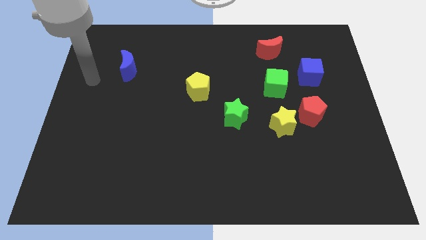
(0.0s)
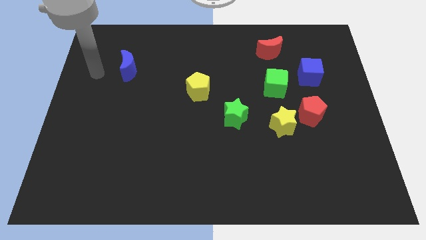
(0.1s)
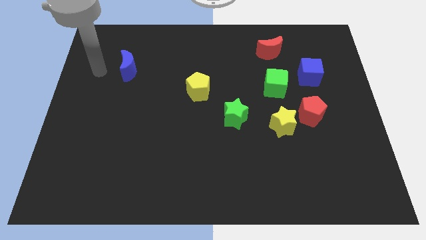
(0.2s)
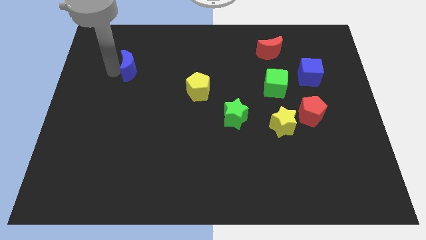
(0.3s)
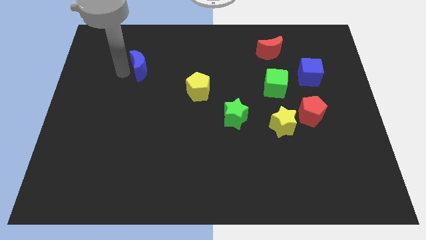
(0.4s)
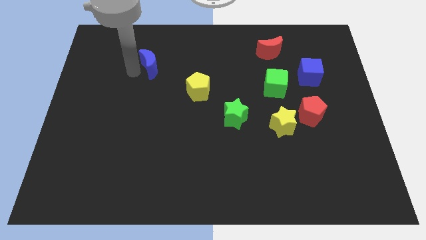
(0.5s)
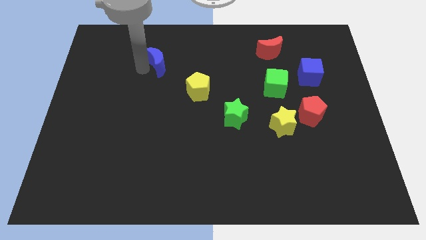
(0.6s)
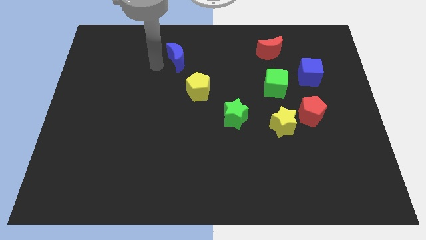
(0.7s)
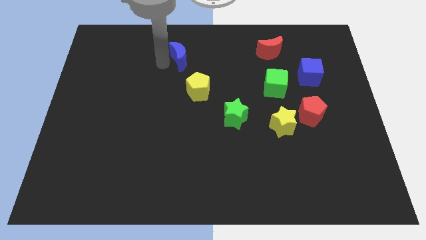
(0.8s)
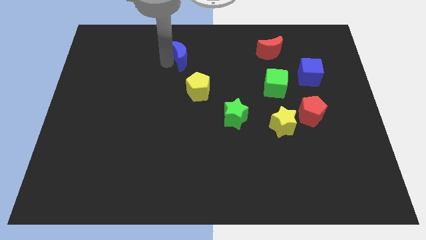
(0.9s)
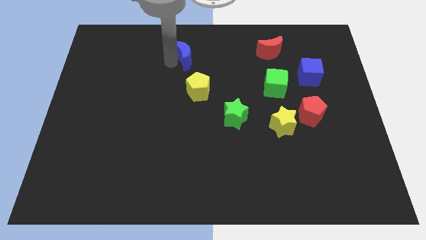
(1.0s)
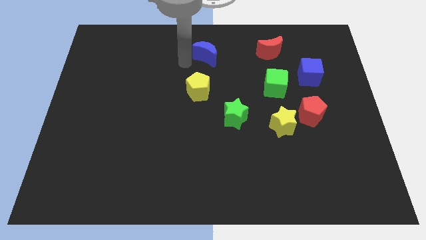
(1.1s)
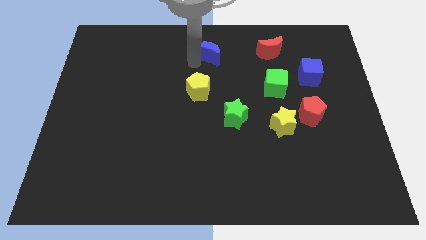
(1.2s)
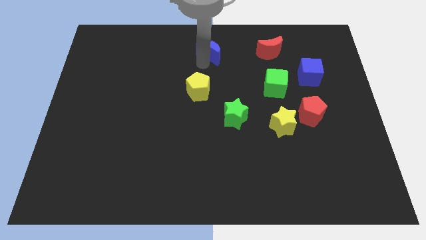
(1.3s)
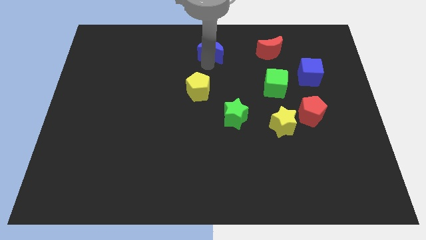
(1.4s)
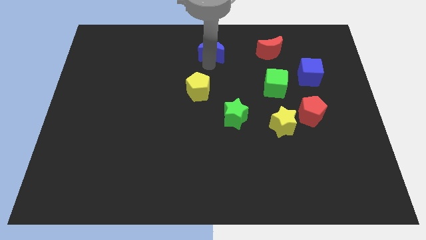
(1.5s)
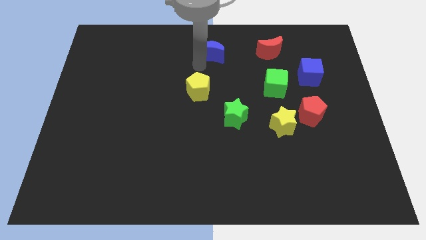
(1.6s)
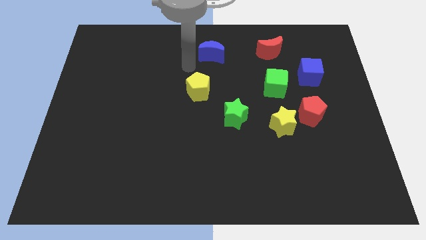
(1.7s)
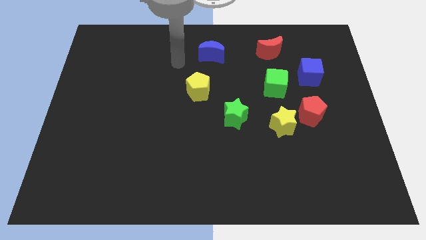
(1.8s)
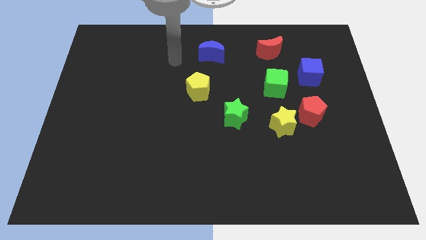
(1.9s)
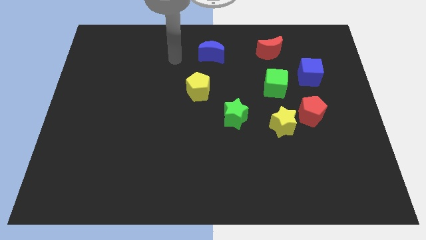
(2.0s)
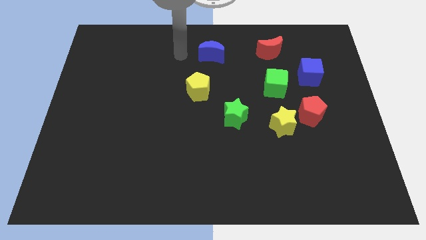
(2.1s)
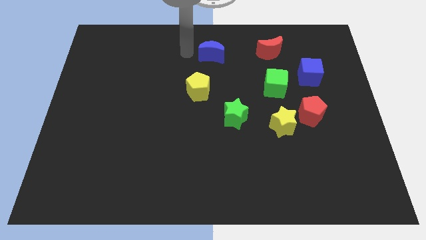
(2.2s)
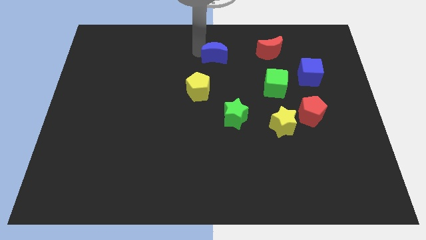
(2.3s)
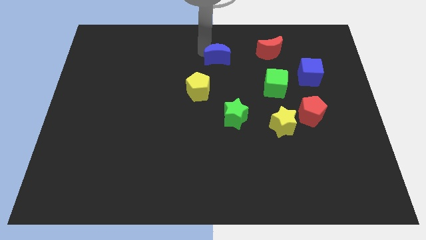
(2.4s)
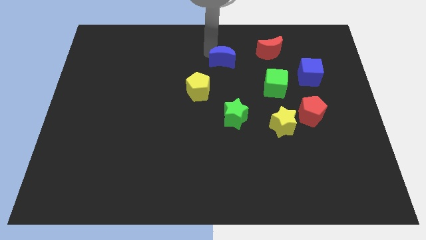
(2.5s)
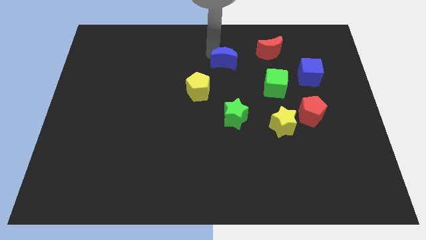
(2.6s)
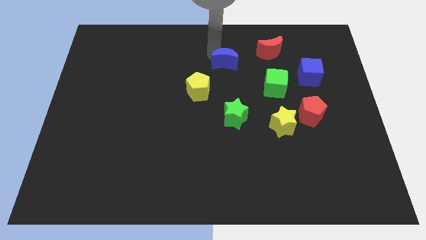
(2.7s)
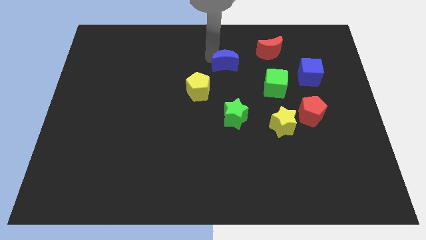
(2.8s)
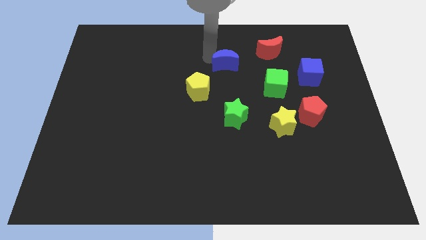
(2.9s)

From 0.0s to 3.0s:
drag the blue moon above the green star

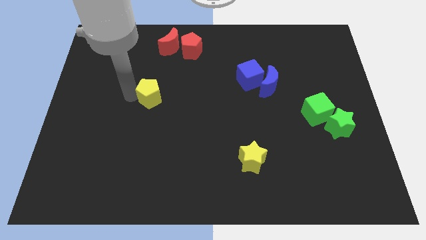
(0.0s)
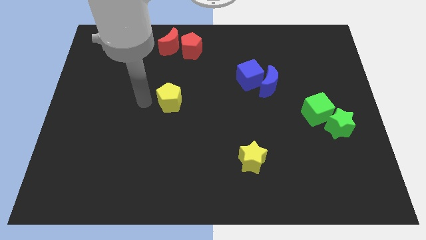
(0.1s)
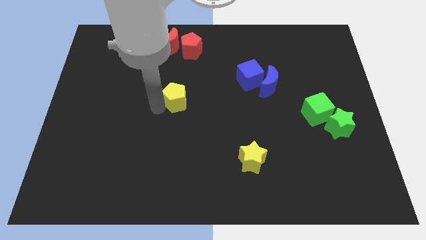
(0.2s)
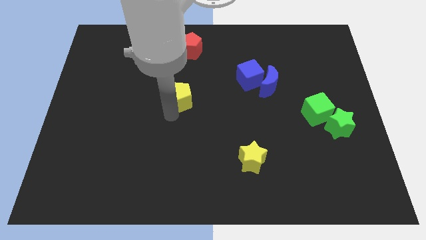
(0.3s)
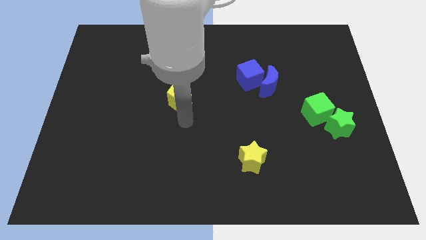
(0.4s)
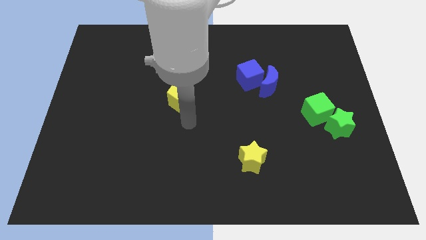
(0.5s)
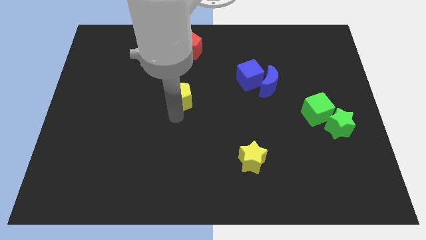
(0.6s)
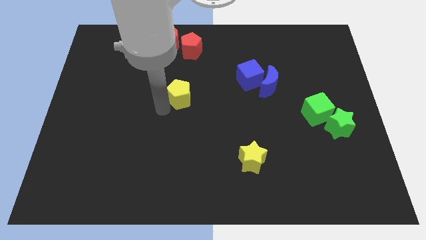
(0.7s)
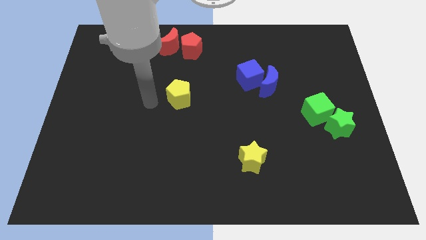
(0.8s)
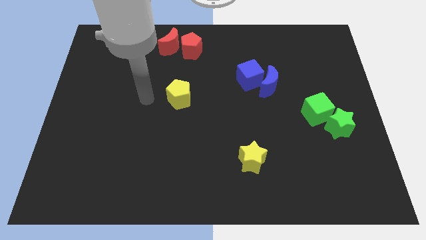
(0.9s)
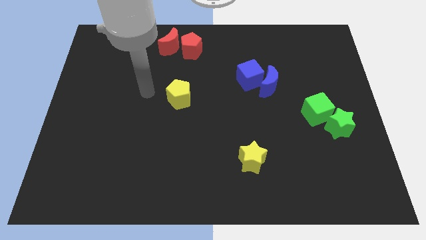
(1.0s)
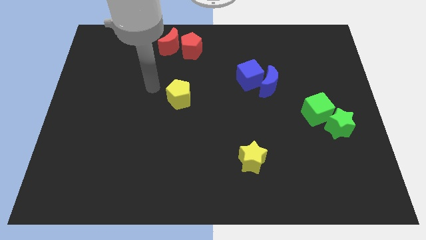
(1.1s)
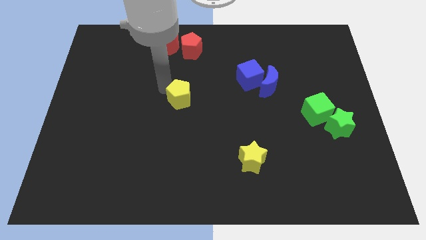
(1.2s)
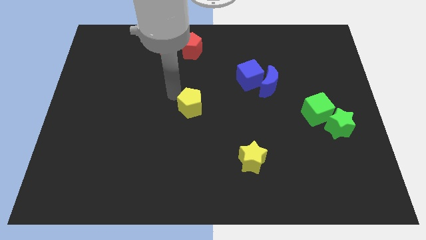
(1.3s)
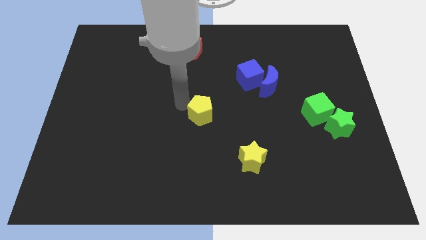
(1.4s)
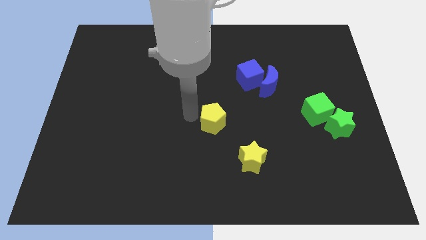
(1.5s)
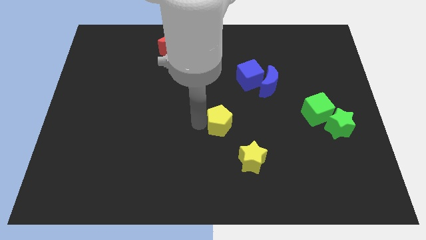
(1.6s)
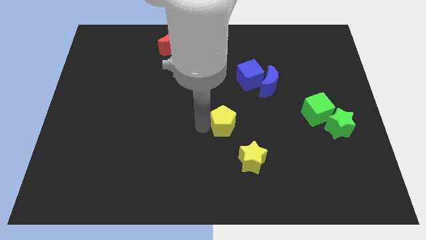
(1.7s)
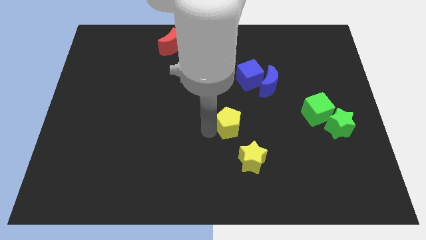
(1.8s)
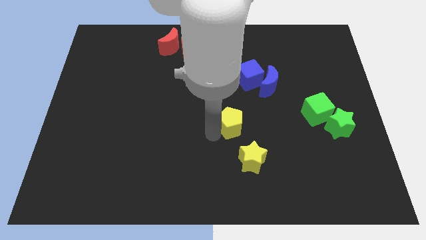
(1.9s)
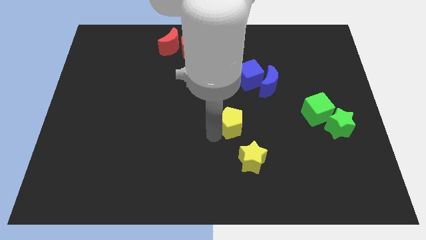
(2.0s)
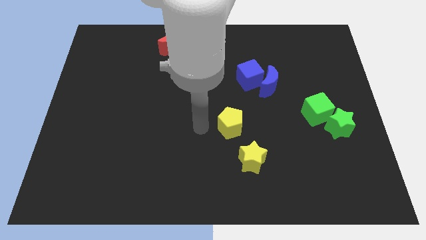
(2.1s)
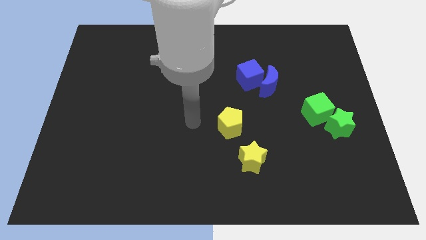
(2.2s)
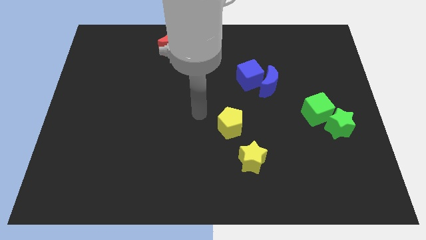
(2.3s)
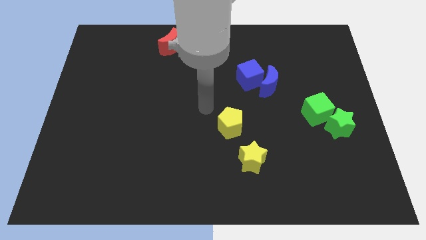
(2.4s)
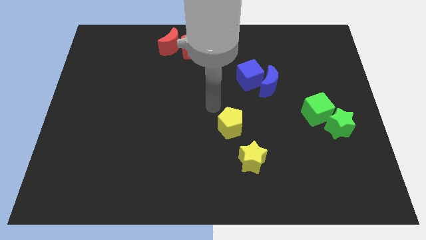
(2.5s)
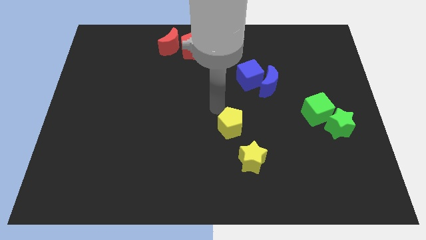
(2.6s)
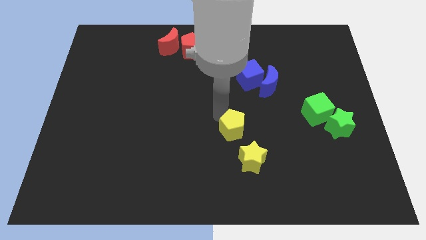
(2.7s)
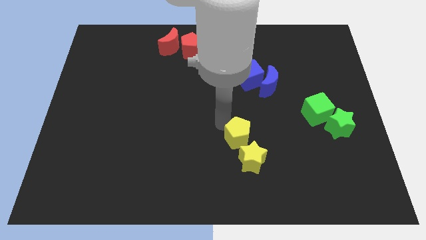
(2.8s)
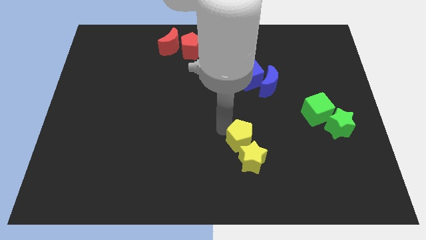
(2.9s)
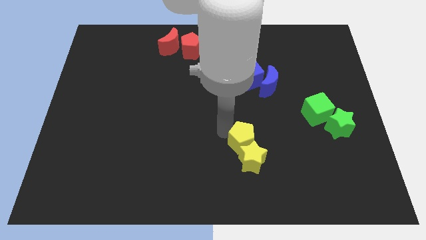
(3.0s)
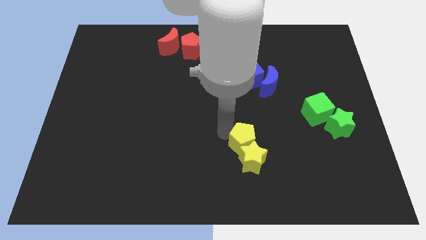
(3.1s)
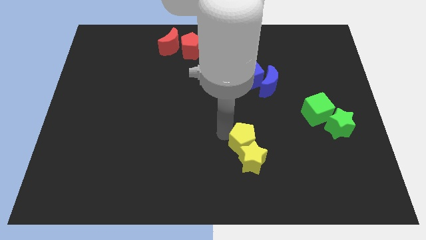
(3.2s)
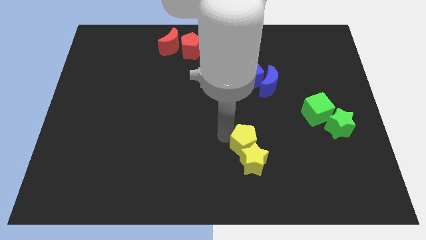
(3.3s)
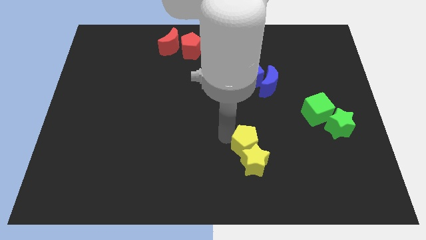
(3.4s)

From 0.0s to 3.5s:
move the yellow pentagon into the yellow star

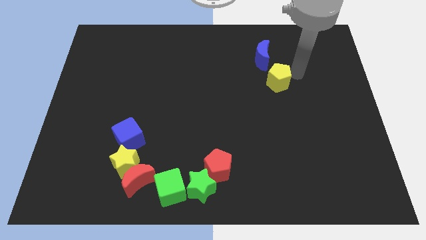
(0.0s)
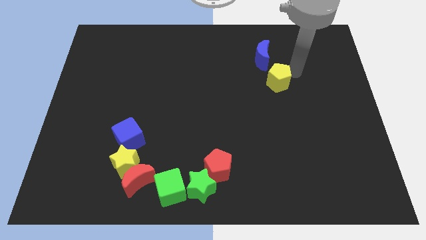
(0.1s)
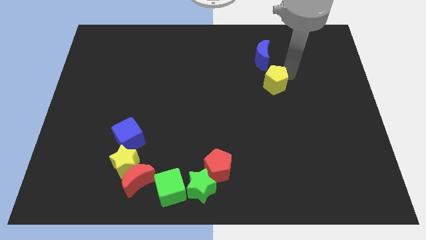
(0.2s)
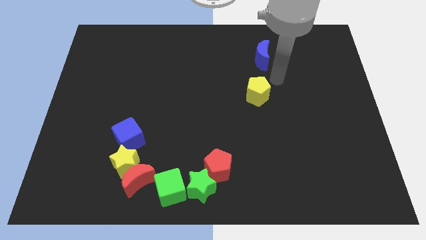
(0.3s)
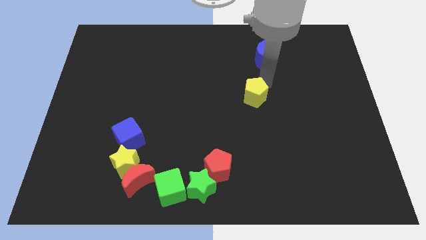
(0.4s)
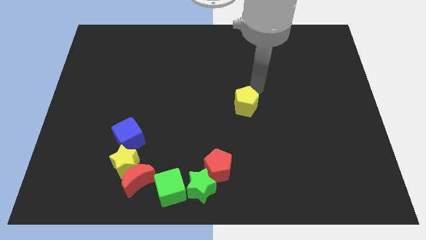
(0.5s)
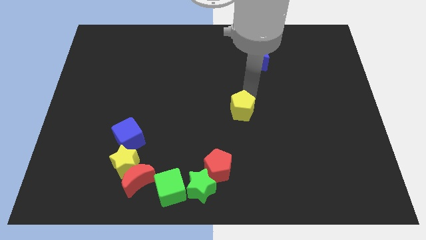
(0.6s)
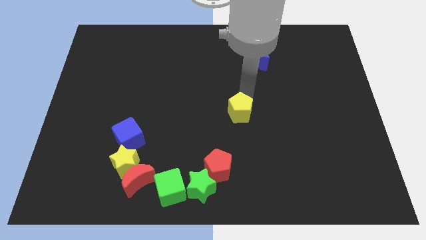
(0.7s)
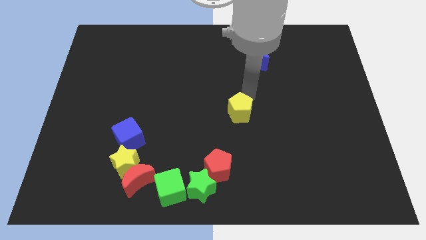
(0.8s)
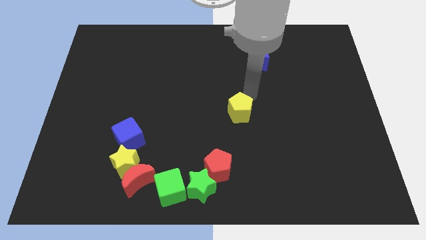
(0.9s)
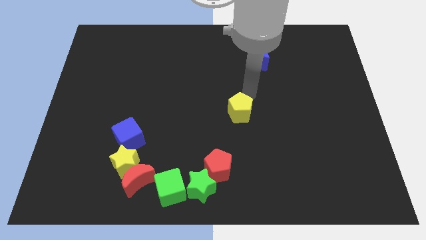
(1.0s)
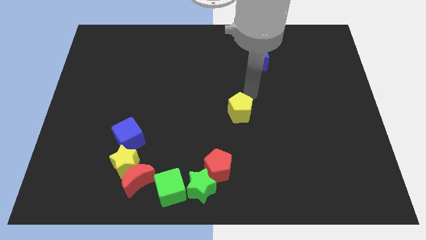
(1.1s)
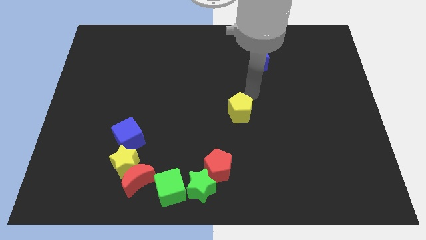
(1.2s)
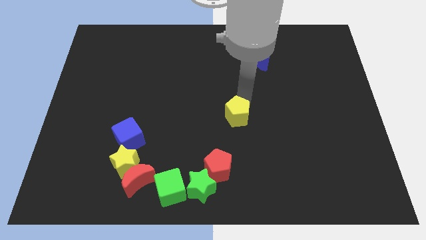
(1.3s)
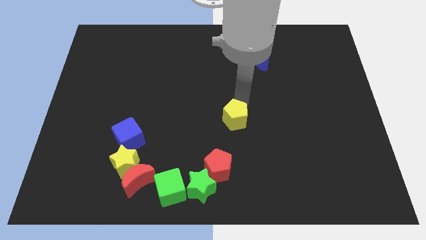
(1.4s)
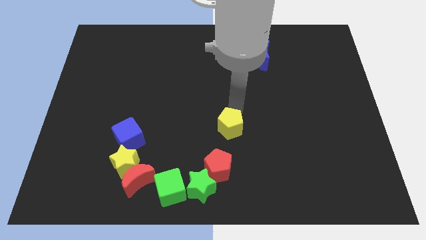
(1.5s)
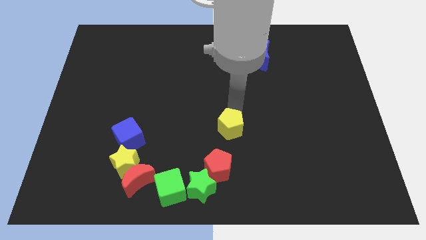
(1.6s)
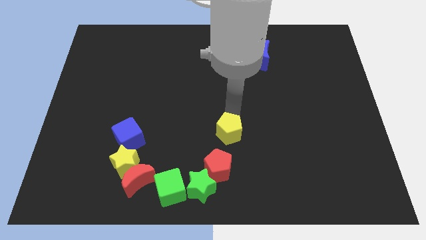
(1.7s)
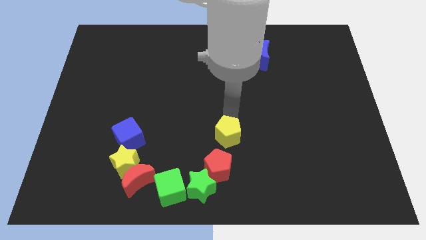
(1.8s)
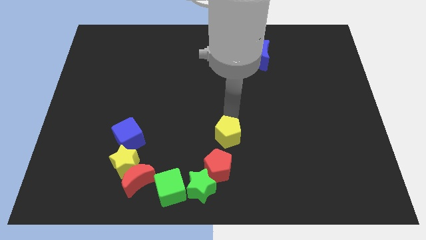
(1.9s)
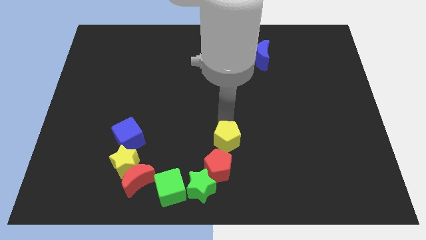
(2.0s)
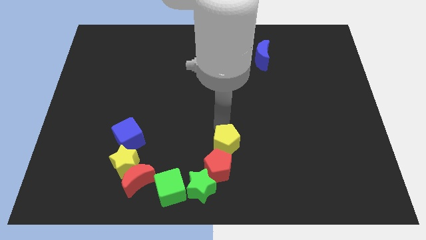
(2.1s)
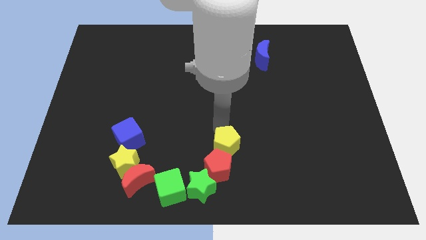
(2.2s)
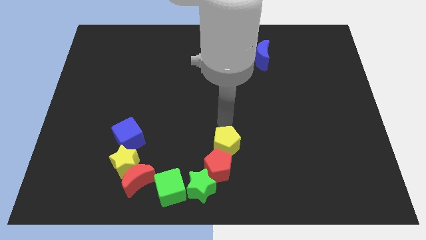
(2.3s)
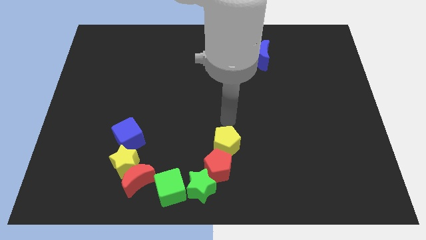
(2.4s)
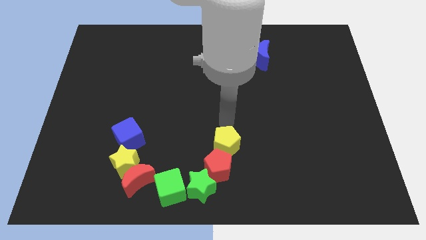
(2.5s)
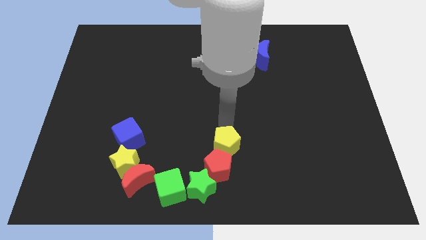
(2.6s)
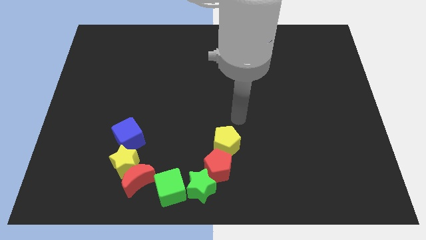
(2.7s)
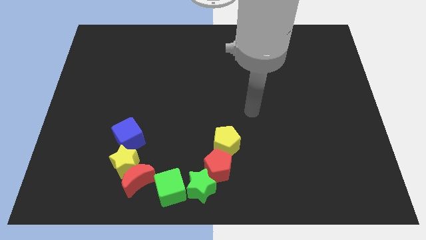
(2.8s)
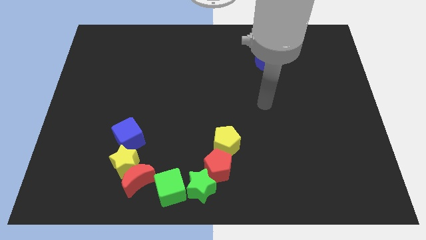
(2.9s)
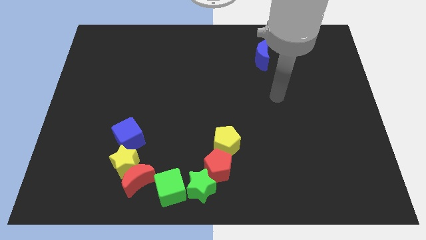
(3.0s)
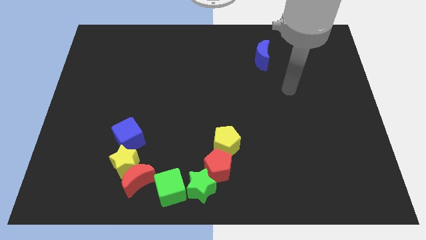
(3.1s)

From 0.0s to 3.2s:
place the yellow pentagon to the top side of the red pentagon
